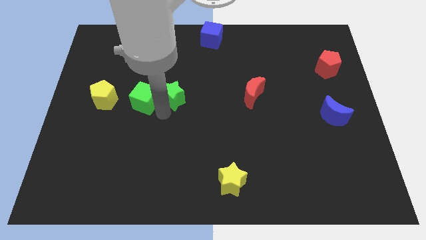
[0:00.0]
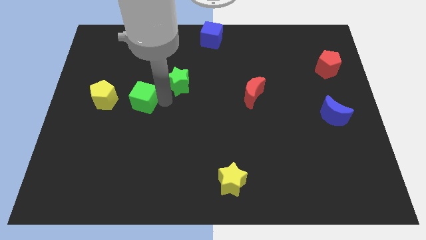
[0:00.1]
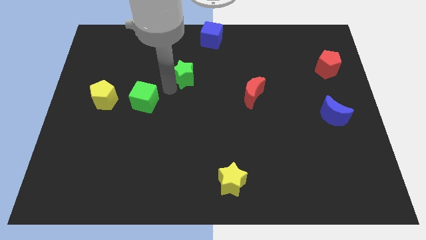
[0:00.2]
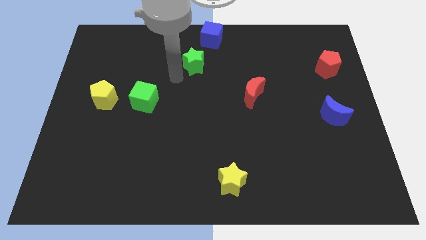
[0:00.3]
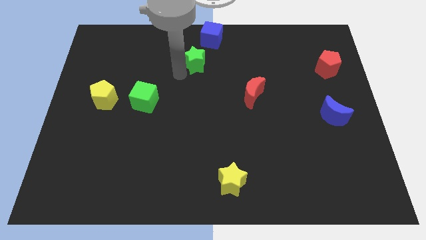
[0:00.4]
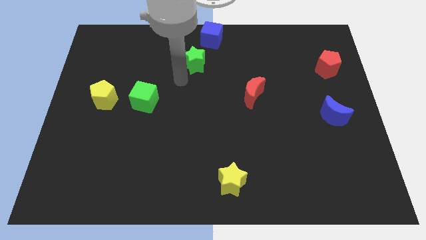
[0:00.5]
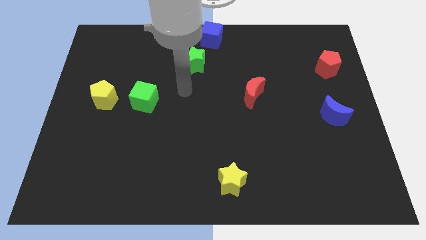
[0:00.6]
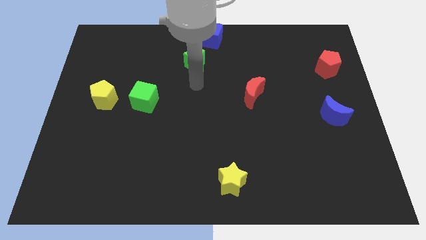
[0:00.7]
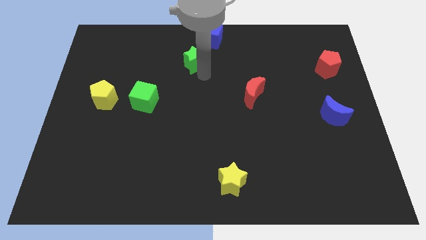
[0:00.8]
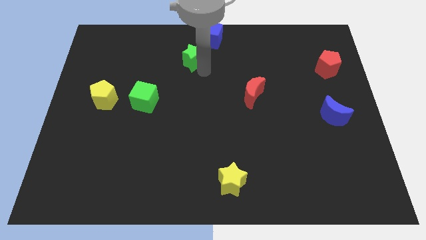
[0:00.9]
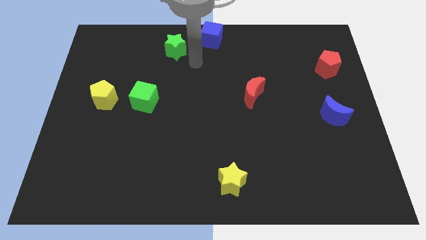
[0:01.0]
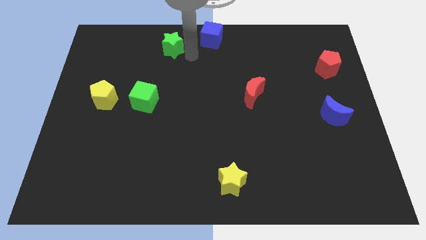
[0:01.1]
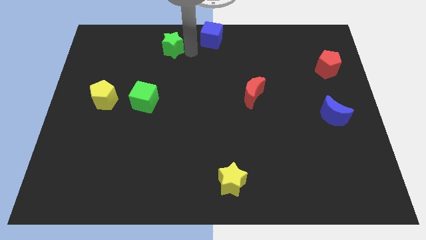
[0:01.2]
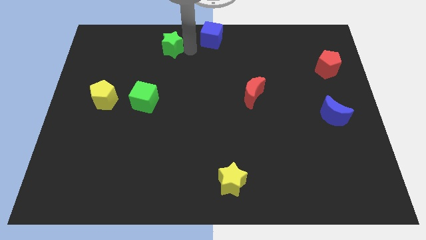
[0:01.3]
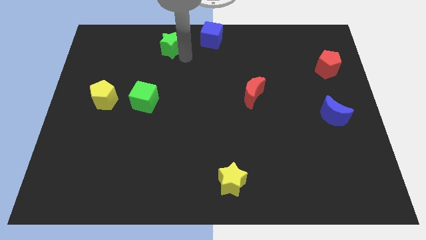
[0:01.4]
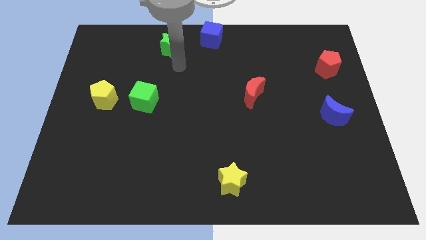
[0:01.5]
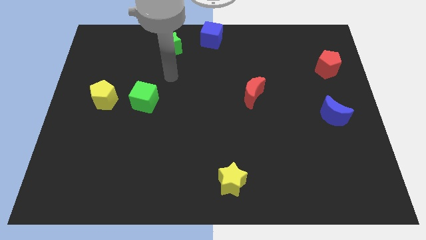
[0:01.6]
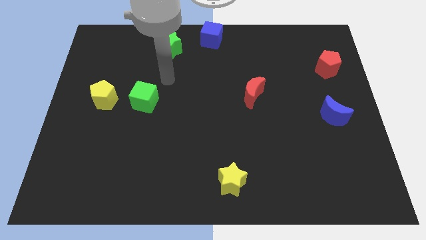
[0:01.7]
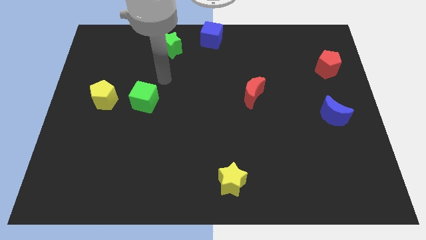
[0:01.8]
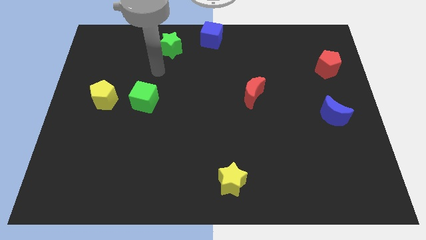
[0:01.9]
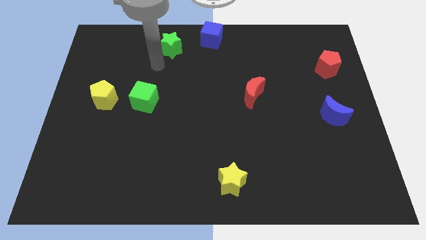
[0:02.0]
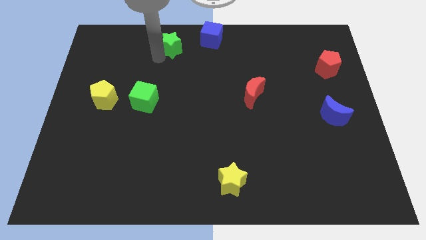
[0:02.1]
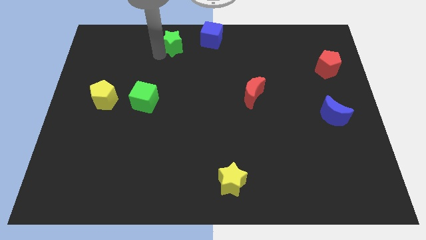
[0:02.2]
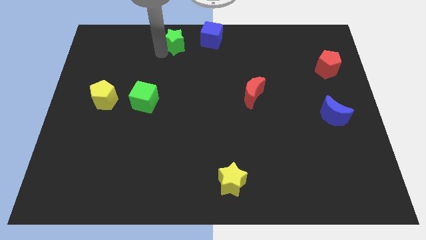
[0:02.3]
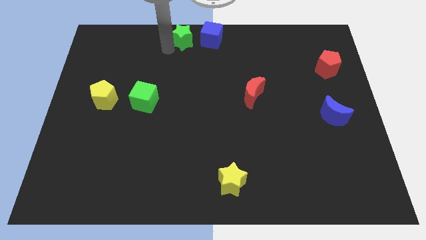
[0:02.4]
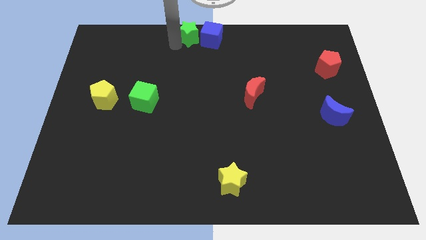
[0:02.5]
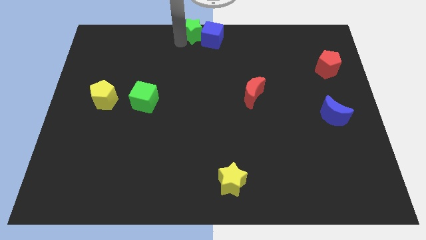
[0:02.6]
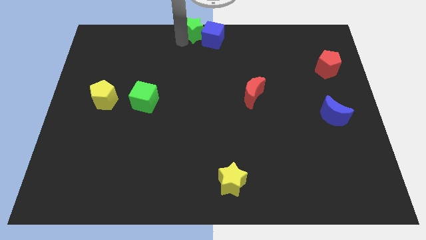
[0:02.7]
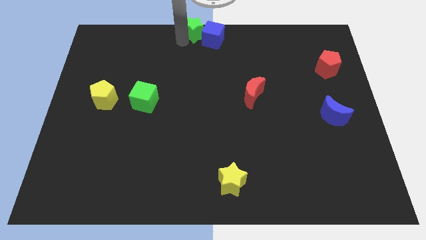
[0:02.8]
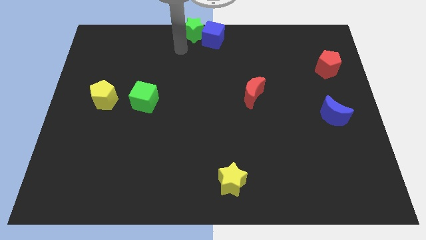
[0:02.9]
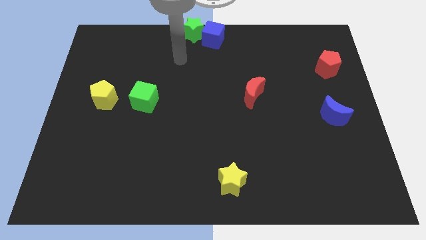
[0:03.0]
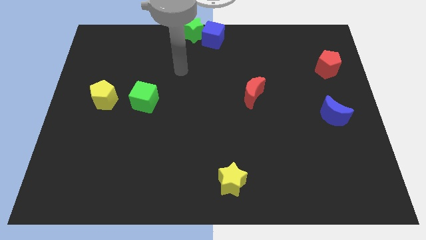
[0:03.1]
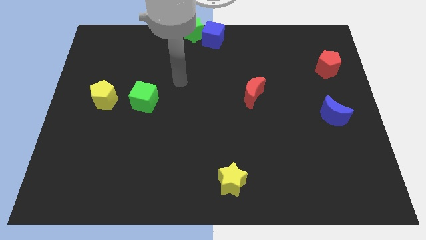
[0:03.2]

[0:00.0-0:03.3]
slide the green star to the top left side of the blue cube

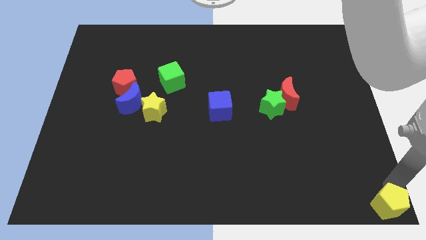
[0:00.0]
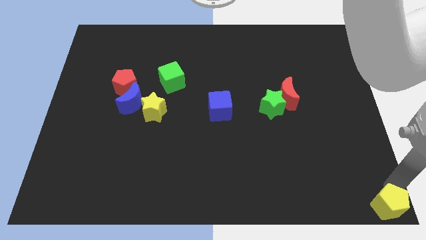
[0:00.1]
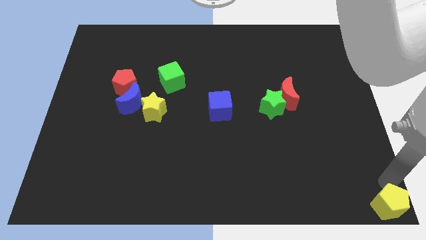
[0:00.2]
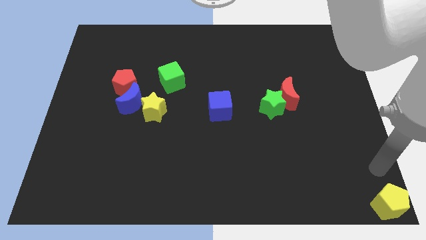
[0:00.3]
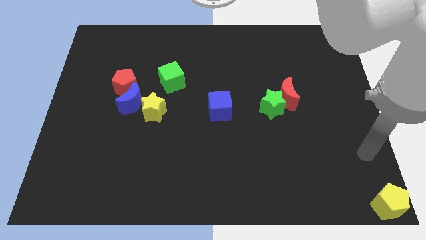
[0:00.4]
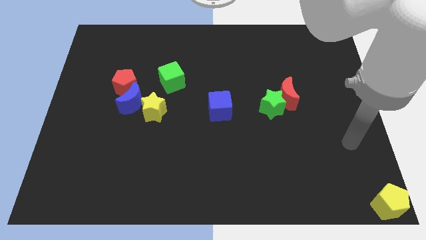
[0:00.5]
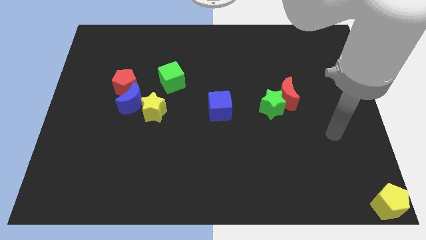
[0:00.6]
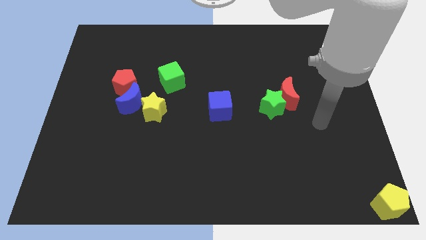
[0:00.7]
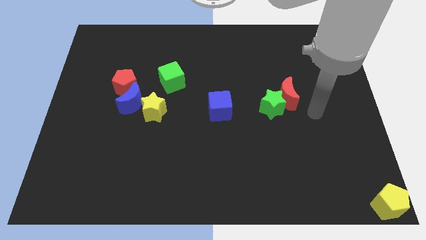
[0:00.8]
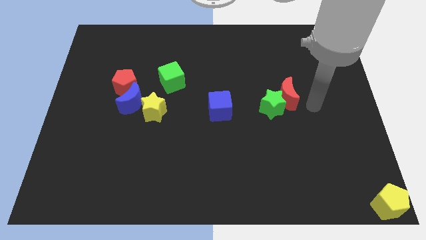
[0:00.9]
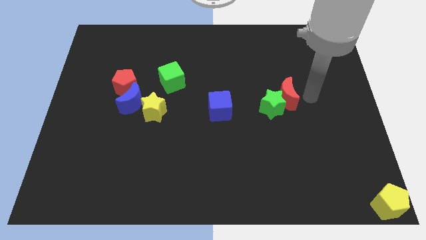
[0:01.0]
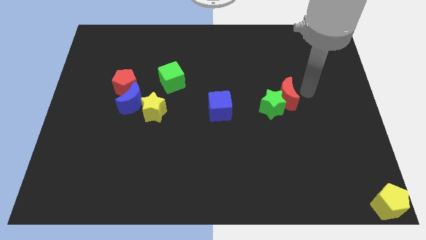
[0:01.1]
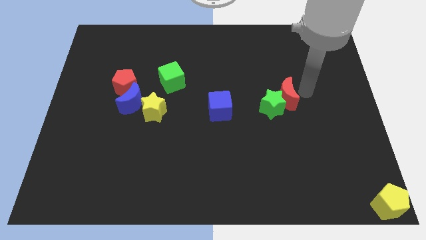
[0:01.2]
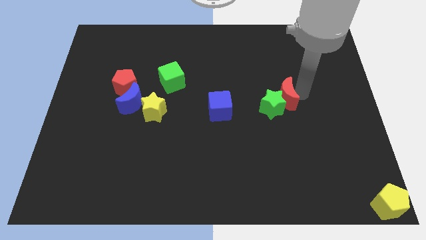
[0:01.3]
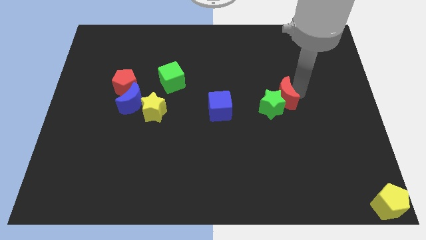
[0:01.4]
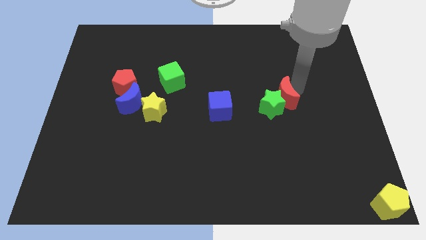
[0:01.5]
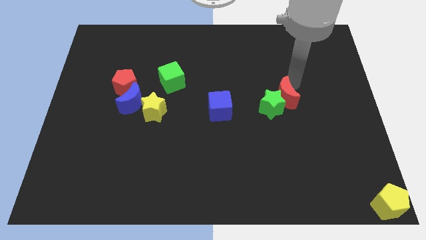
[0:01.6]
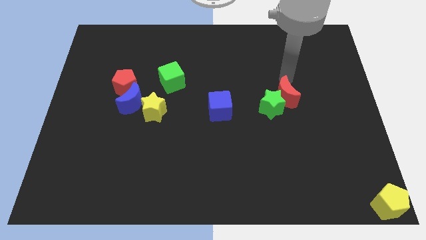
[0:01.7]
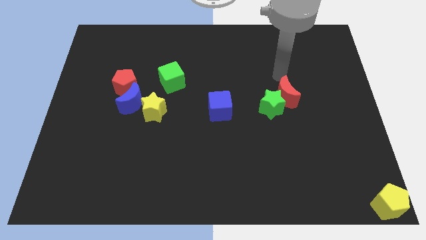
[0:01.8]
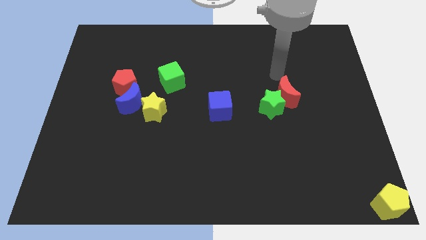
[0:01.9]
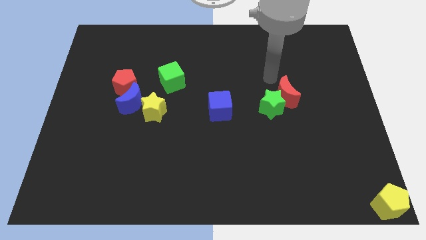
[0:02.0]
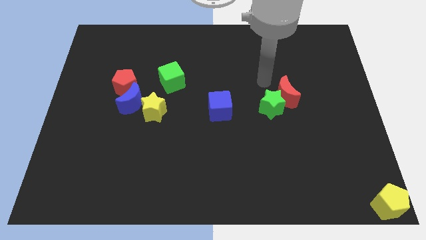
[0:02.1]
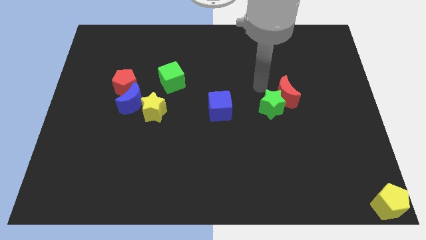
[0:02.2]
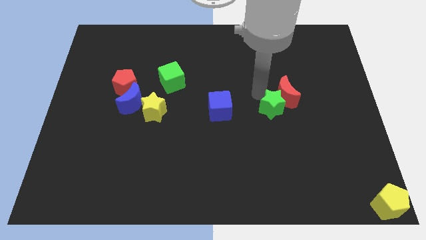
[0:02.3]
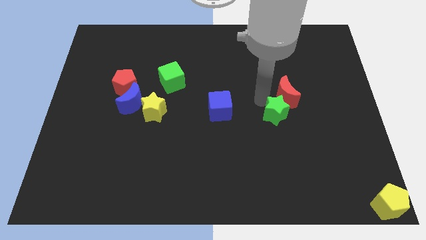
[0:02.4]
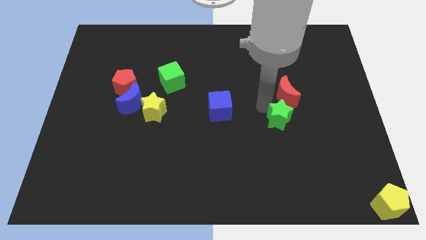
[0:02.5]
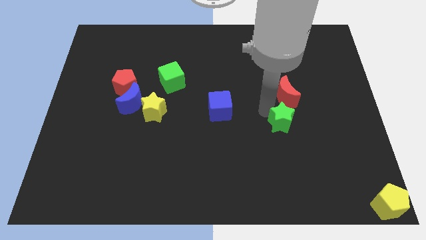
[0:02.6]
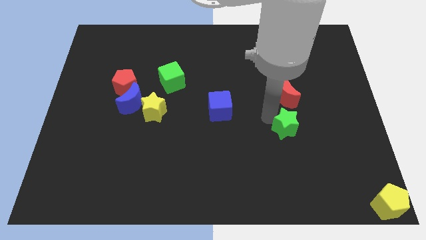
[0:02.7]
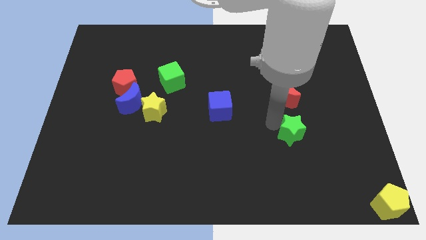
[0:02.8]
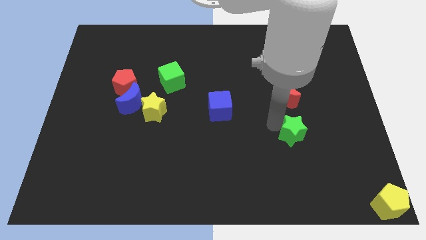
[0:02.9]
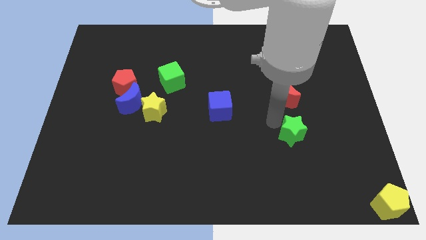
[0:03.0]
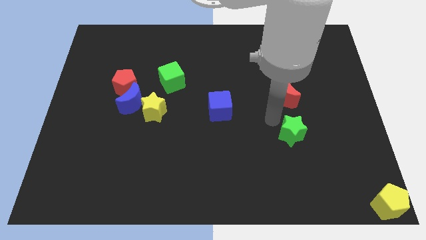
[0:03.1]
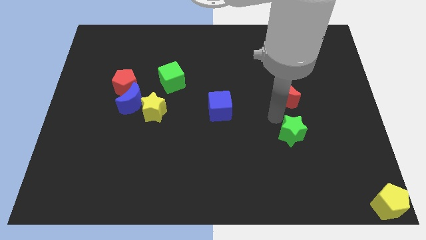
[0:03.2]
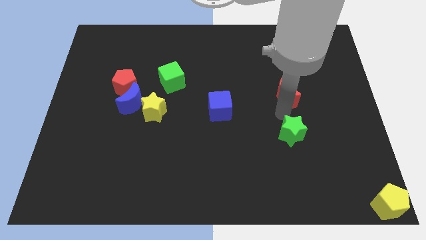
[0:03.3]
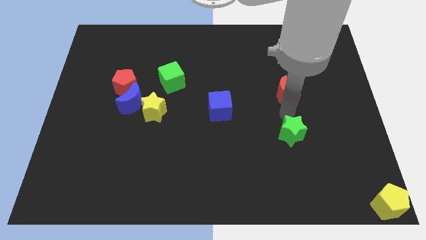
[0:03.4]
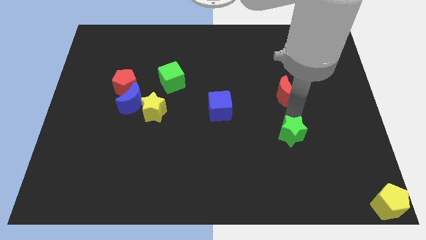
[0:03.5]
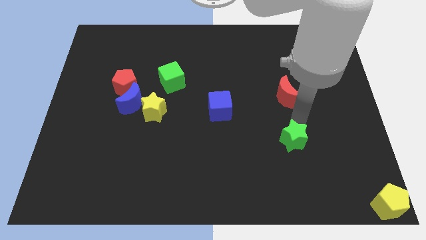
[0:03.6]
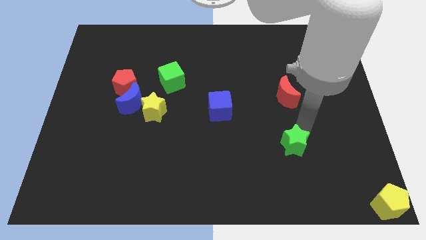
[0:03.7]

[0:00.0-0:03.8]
push the green star to the bottom of the red crescent

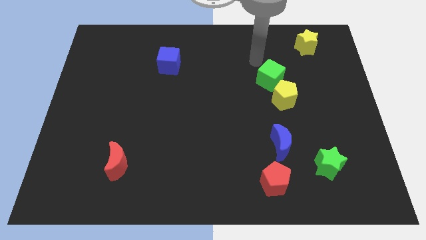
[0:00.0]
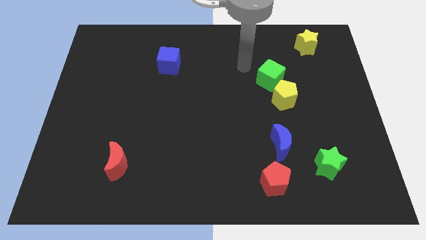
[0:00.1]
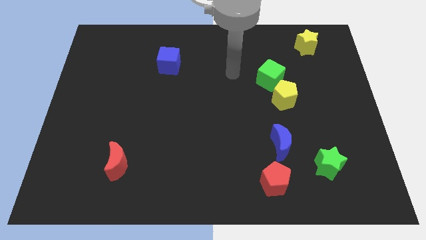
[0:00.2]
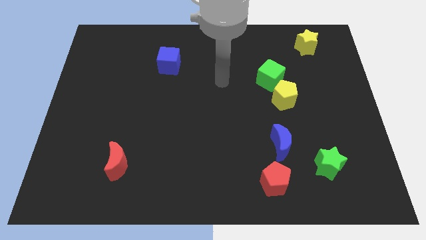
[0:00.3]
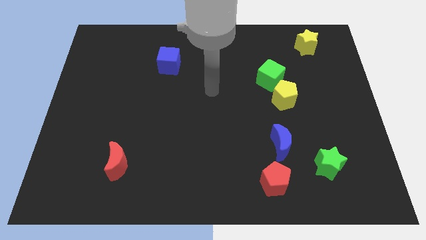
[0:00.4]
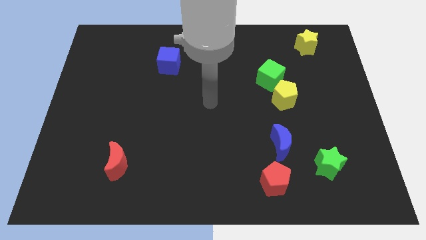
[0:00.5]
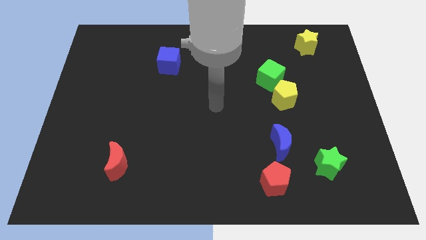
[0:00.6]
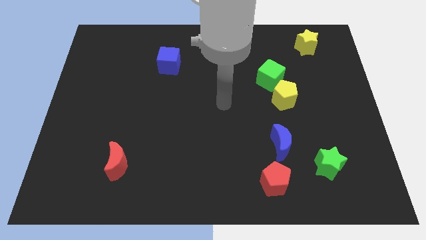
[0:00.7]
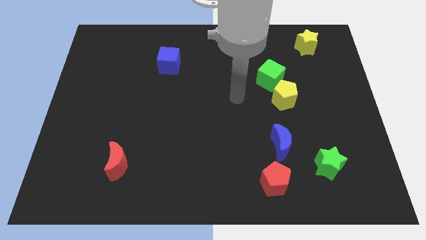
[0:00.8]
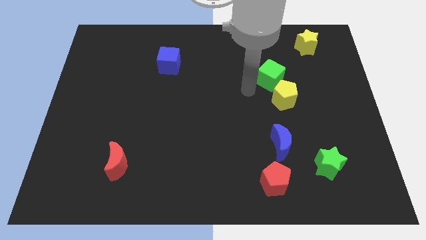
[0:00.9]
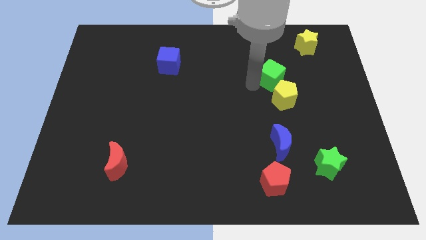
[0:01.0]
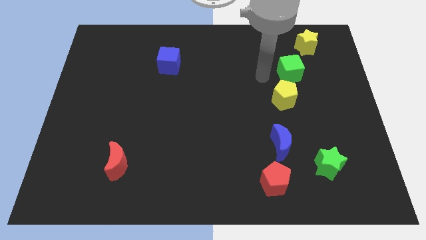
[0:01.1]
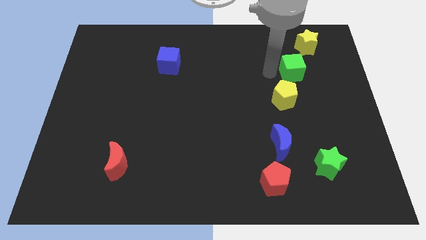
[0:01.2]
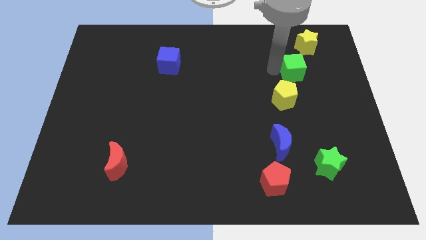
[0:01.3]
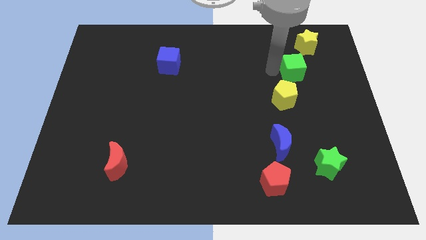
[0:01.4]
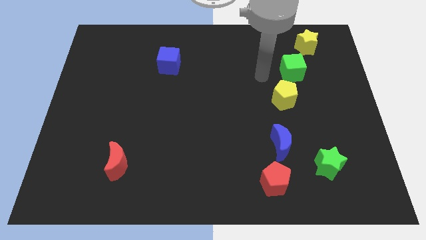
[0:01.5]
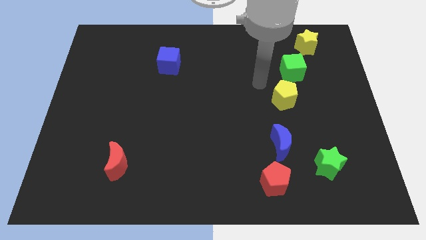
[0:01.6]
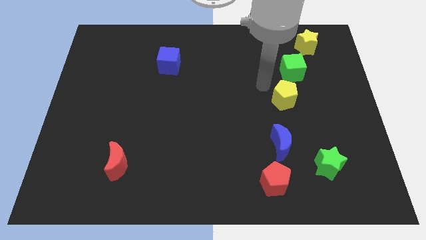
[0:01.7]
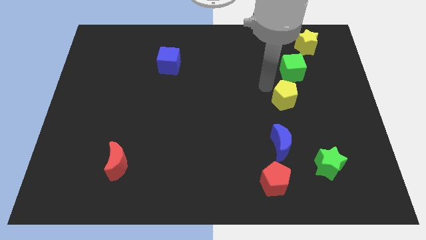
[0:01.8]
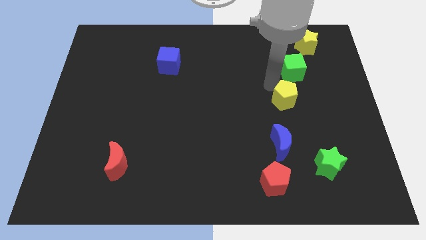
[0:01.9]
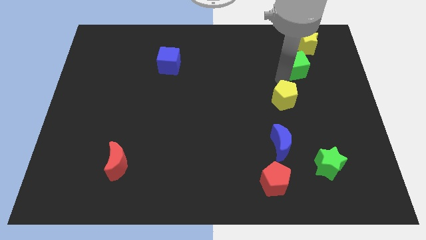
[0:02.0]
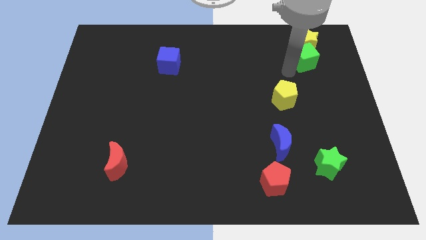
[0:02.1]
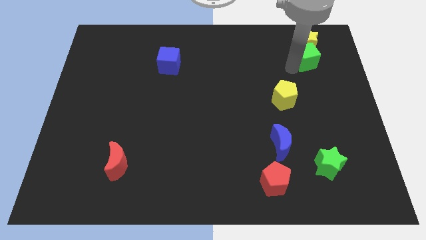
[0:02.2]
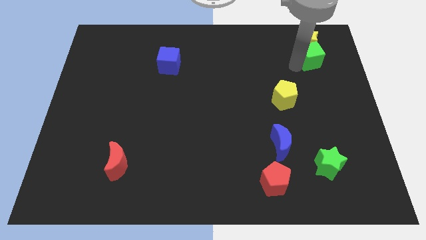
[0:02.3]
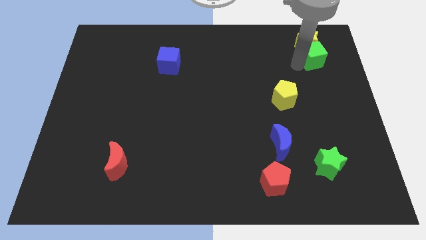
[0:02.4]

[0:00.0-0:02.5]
push green cube below yellow star
